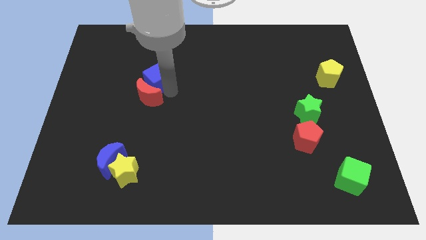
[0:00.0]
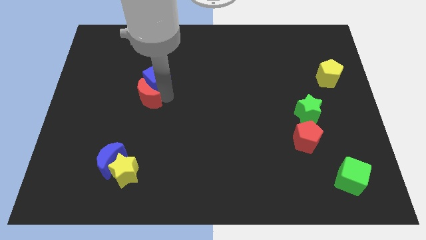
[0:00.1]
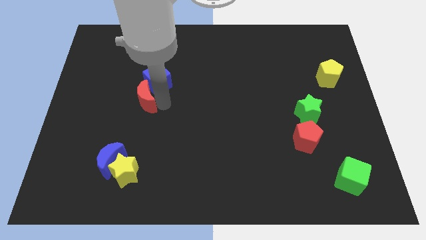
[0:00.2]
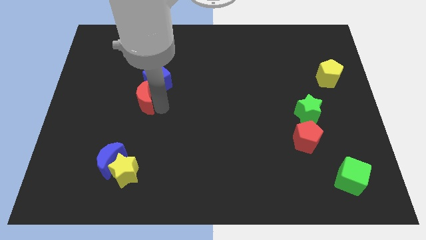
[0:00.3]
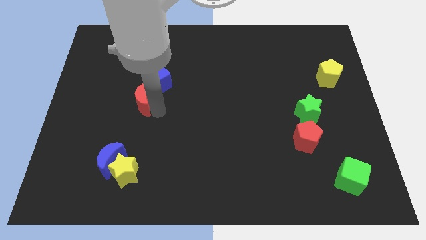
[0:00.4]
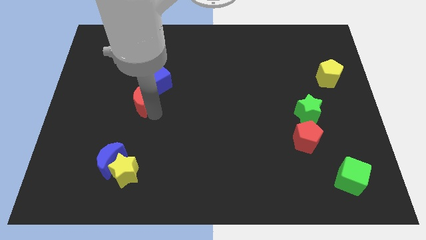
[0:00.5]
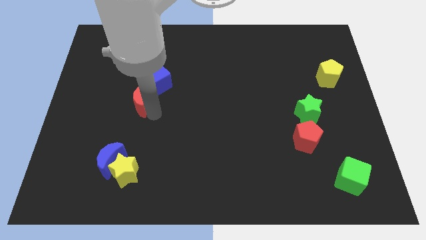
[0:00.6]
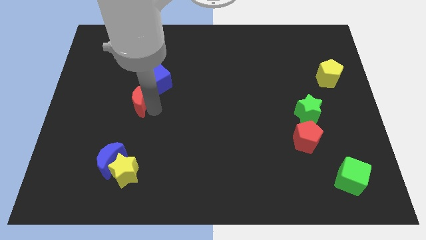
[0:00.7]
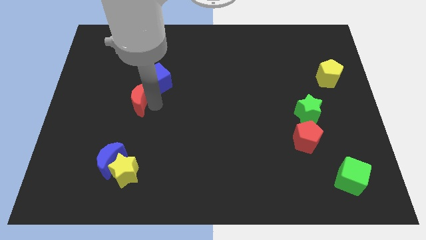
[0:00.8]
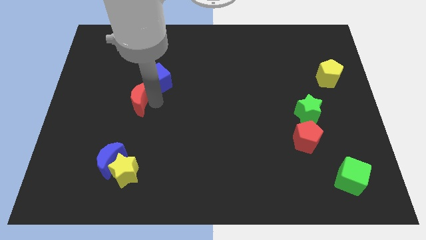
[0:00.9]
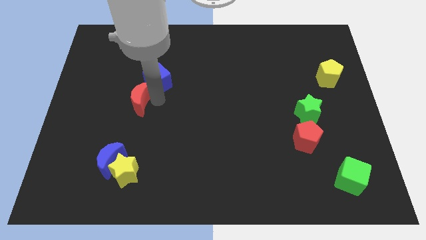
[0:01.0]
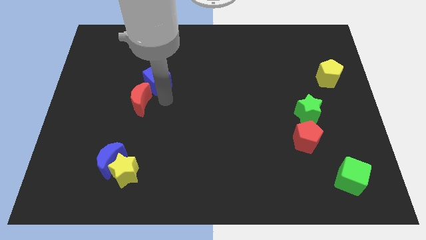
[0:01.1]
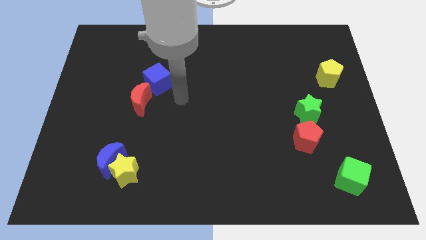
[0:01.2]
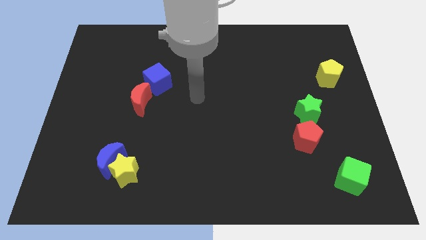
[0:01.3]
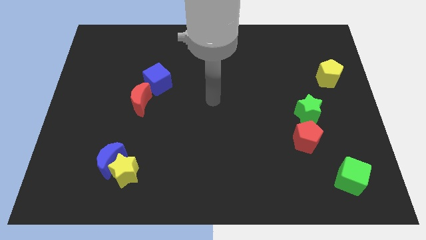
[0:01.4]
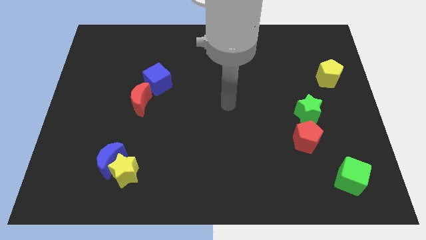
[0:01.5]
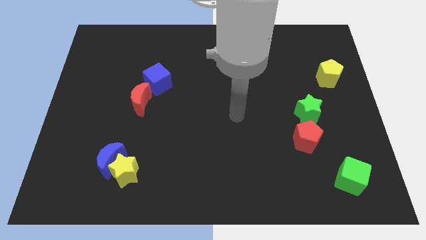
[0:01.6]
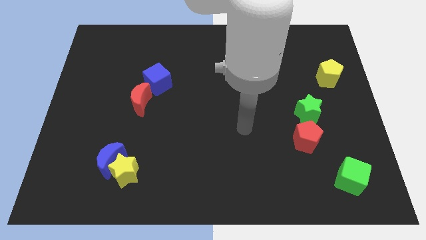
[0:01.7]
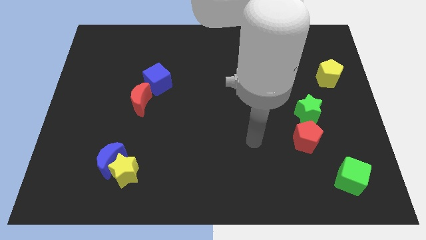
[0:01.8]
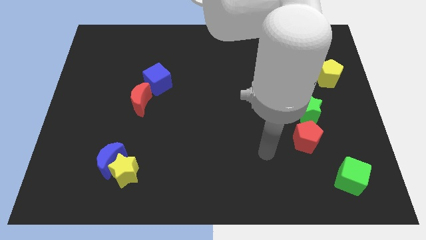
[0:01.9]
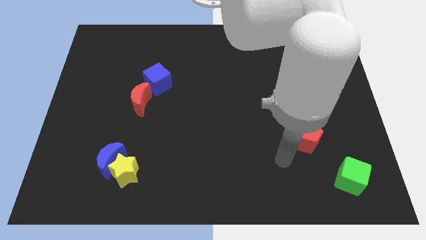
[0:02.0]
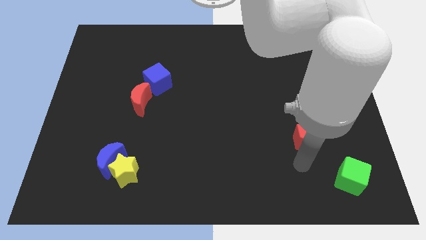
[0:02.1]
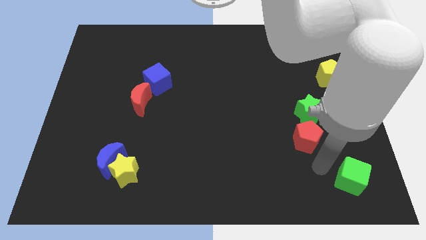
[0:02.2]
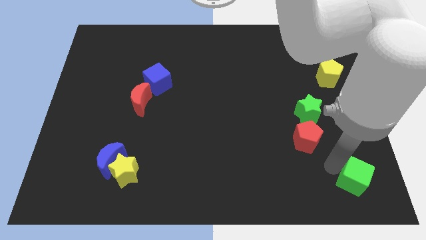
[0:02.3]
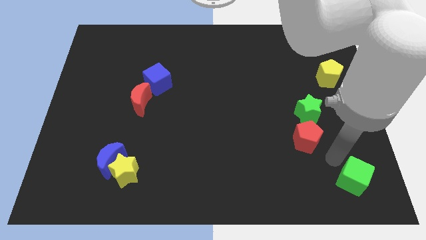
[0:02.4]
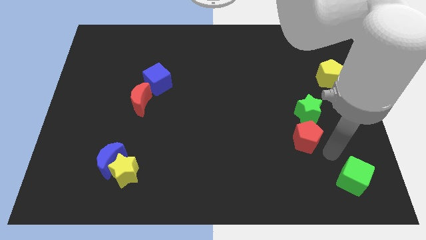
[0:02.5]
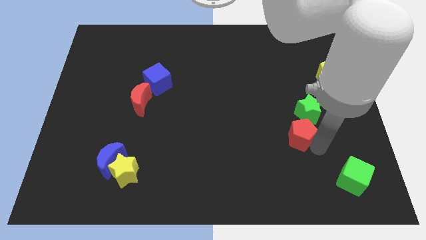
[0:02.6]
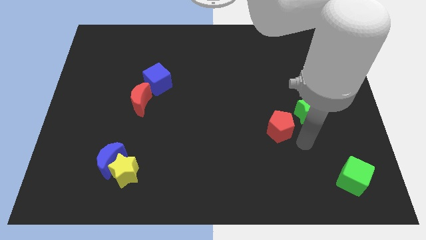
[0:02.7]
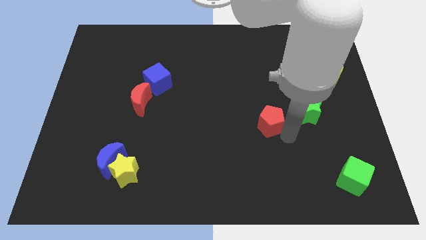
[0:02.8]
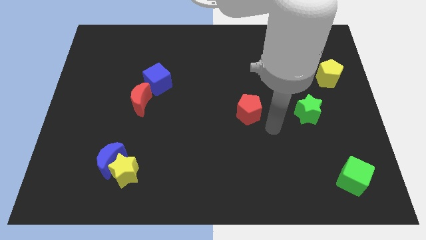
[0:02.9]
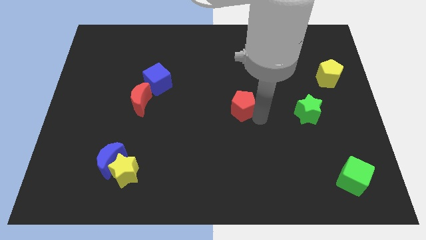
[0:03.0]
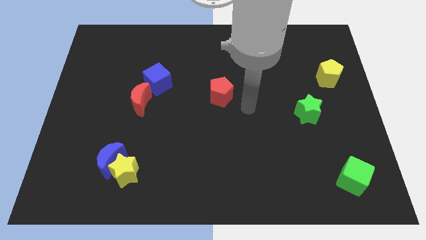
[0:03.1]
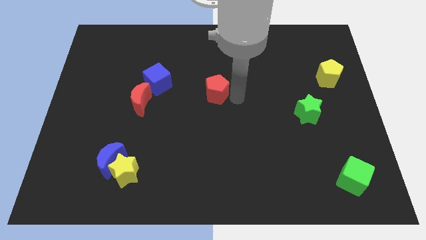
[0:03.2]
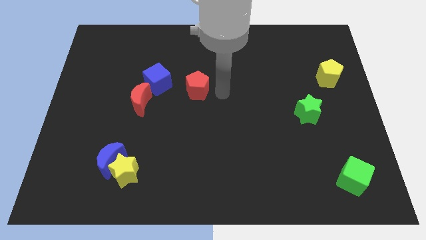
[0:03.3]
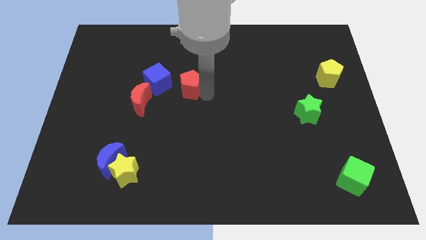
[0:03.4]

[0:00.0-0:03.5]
place the red pentagon to the right side of the blue cube

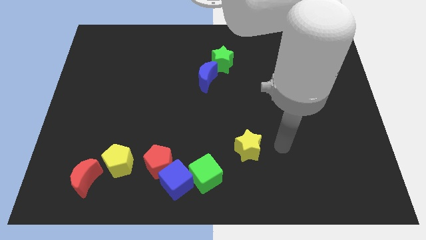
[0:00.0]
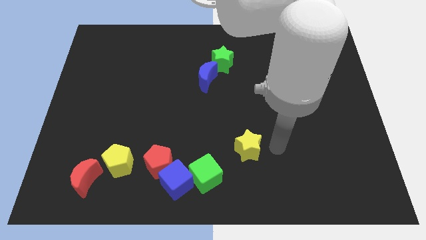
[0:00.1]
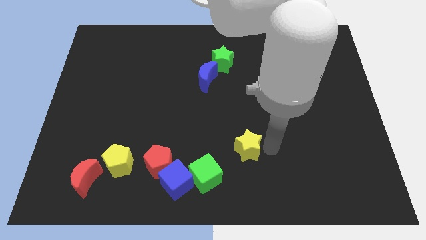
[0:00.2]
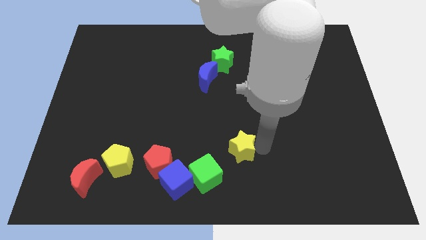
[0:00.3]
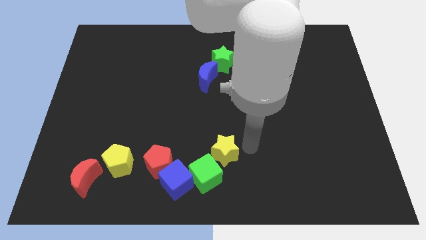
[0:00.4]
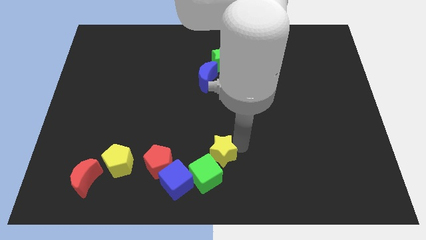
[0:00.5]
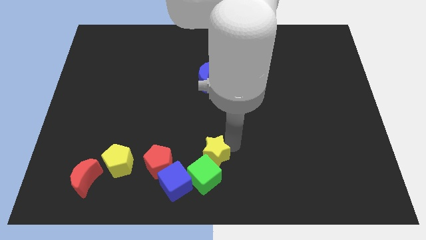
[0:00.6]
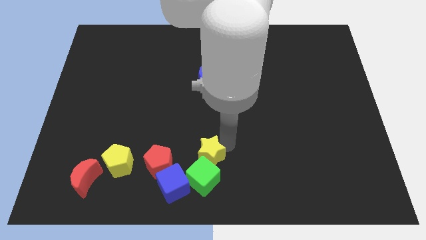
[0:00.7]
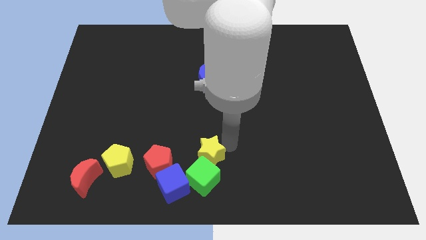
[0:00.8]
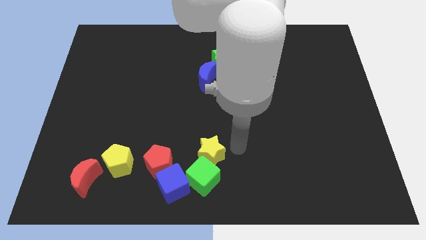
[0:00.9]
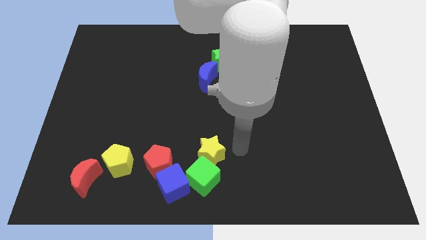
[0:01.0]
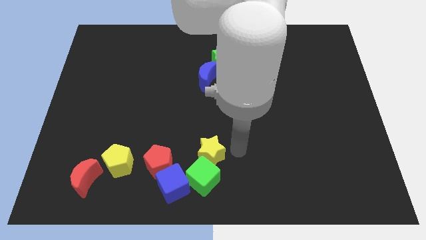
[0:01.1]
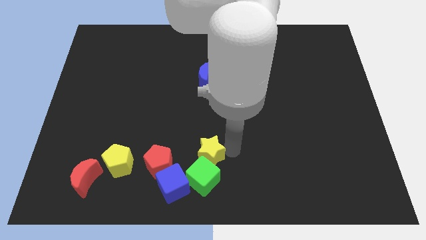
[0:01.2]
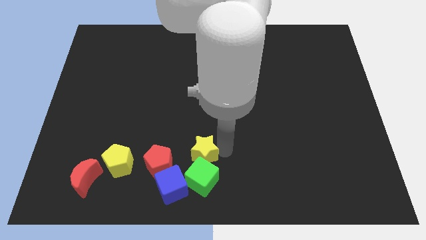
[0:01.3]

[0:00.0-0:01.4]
move the yellow star to the top of the green cube

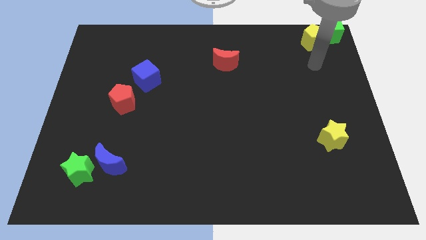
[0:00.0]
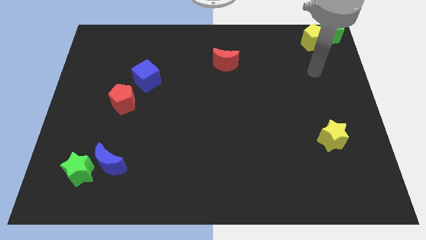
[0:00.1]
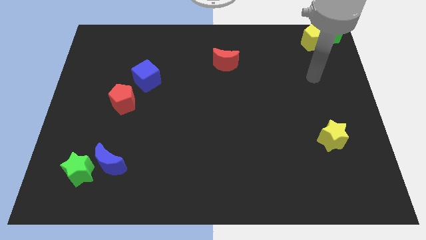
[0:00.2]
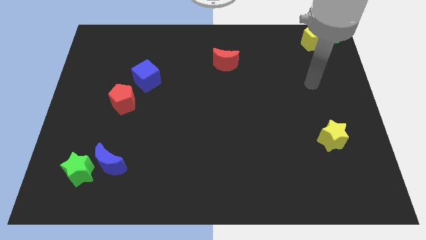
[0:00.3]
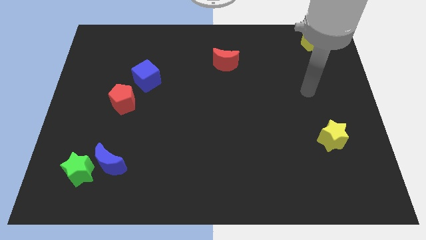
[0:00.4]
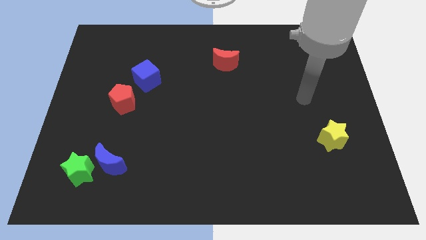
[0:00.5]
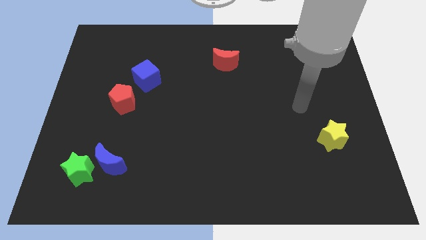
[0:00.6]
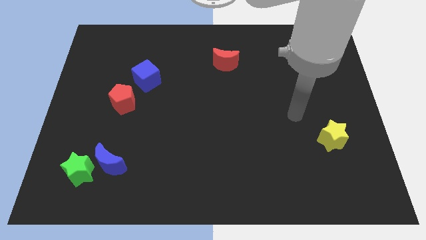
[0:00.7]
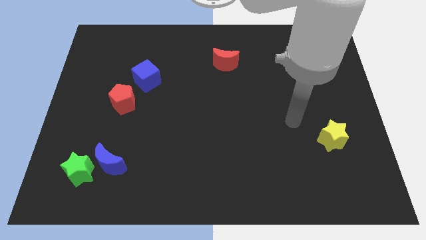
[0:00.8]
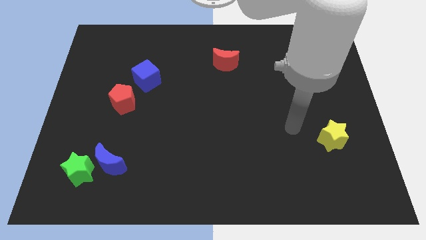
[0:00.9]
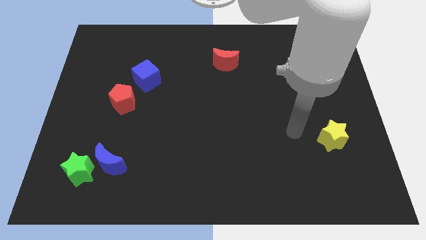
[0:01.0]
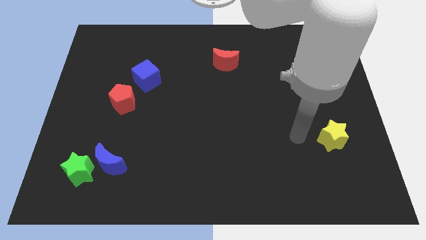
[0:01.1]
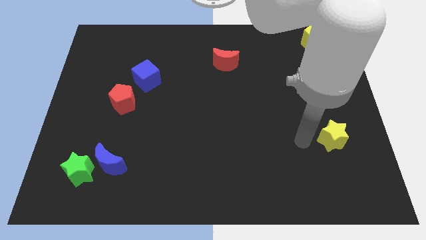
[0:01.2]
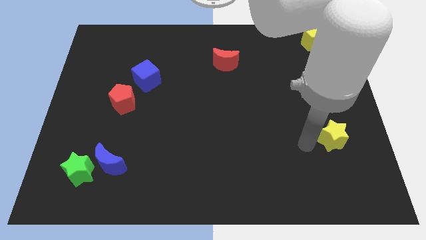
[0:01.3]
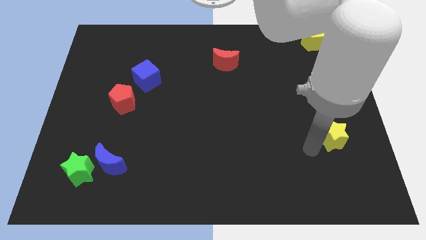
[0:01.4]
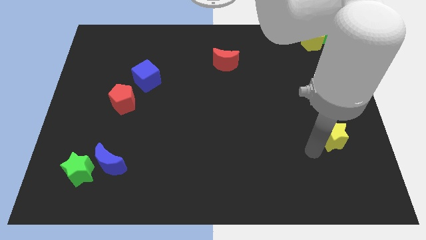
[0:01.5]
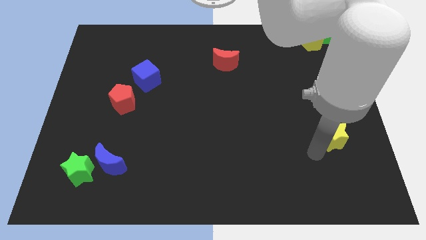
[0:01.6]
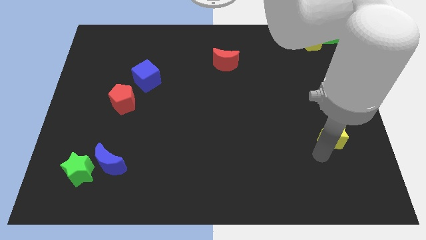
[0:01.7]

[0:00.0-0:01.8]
move your hand towards the yellow star

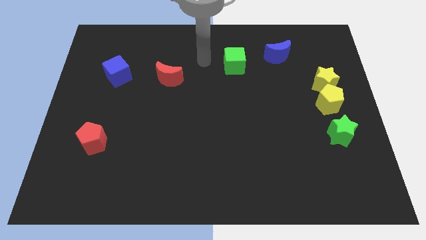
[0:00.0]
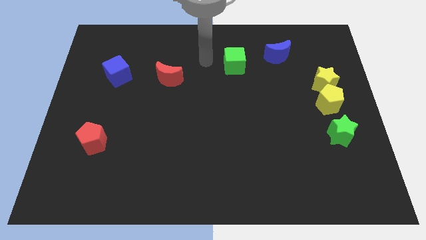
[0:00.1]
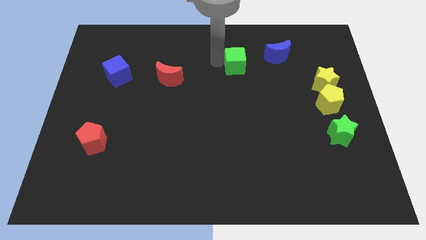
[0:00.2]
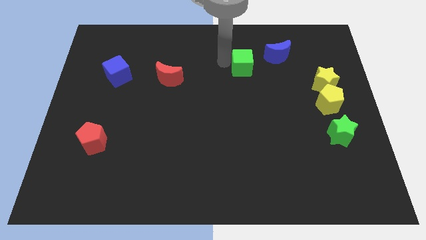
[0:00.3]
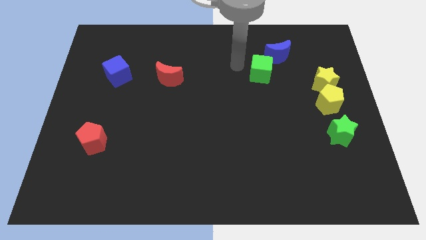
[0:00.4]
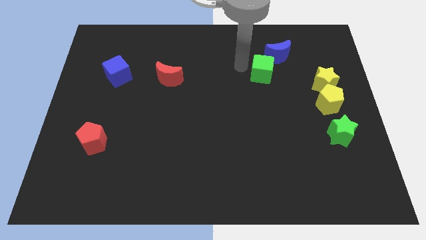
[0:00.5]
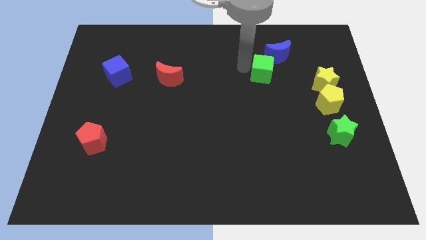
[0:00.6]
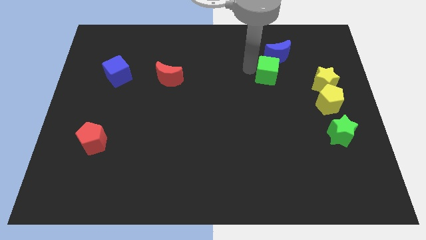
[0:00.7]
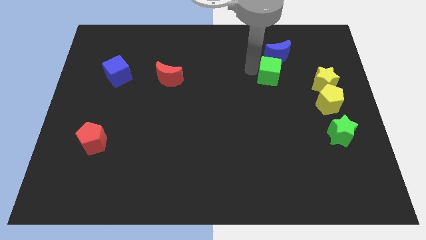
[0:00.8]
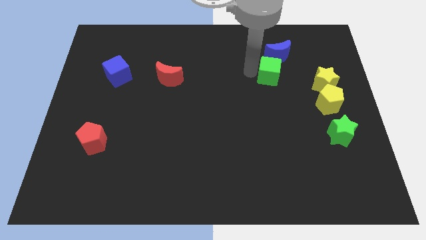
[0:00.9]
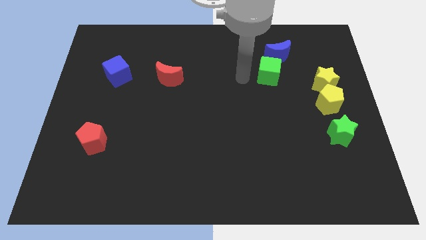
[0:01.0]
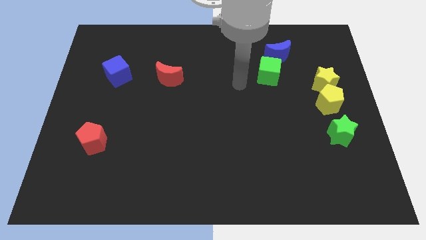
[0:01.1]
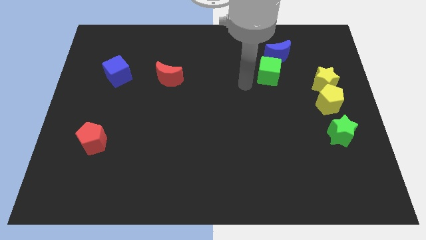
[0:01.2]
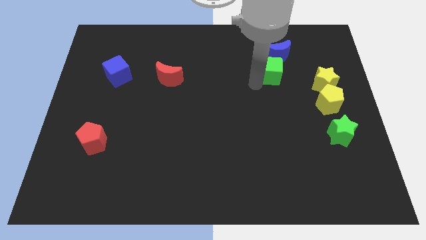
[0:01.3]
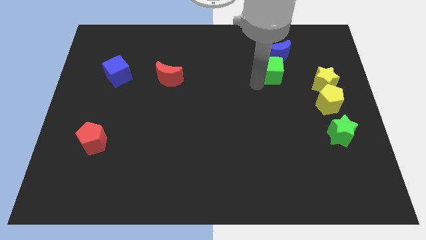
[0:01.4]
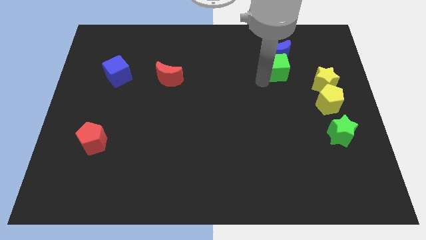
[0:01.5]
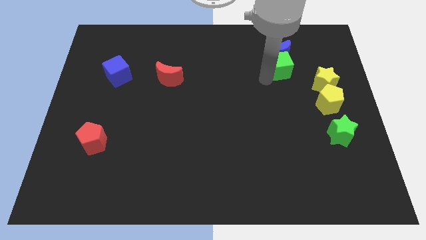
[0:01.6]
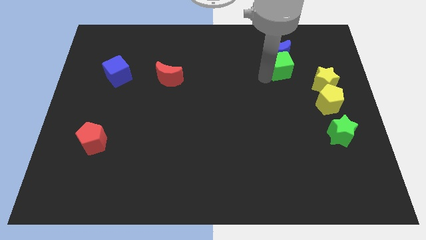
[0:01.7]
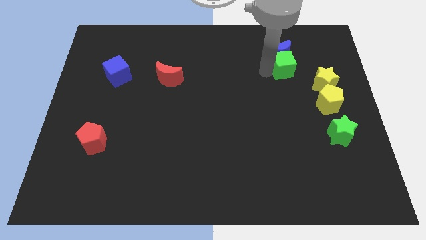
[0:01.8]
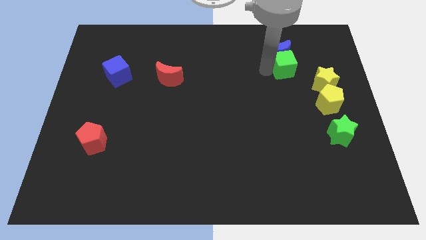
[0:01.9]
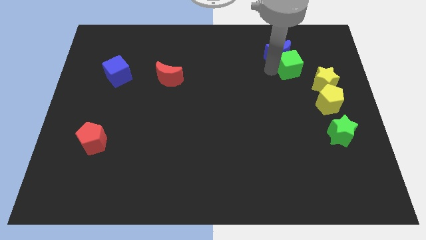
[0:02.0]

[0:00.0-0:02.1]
place green cube down to the blue crescent
